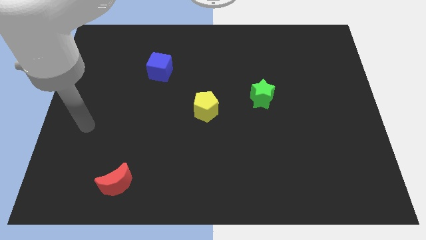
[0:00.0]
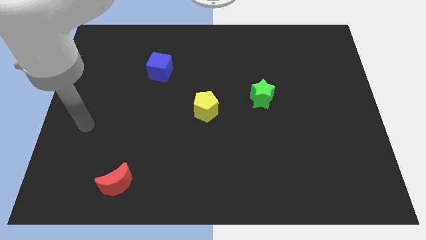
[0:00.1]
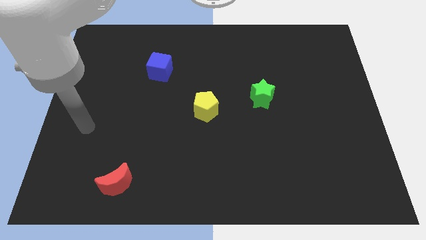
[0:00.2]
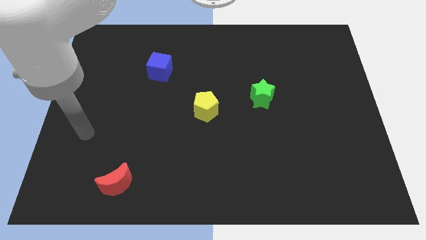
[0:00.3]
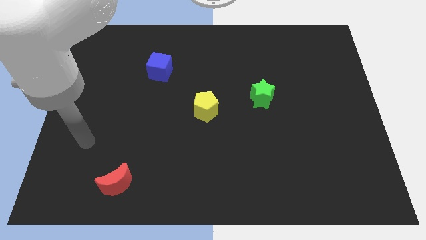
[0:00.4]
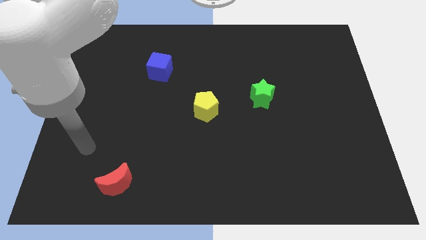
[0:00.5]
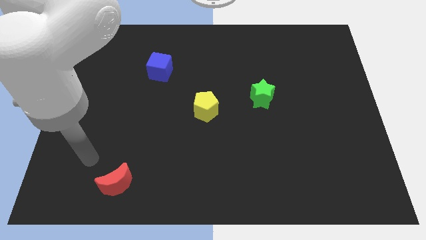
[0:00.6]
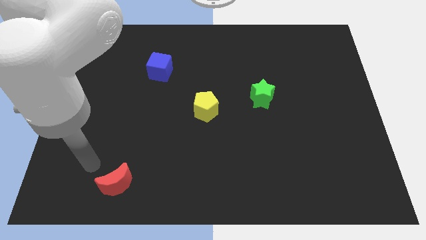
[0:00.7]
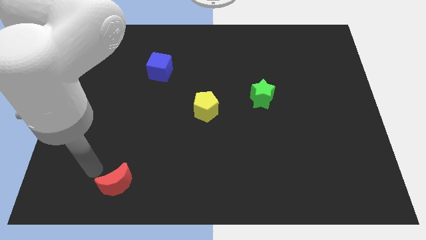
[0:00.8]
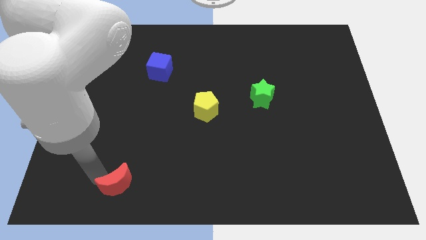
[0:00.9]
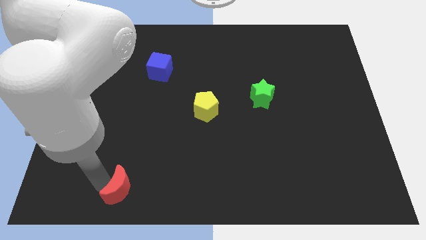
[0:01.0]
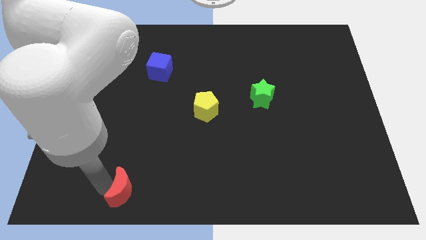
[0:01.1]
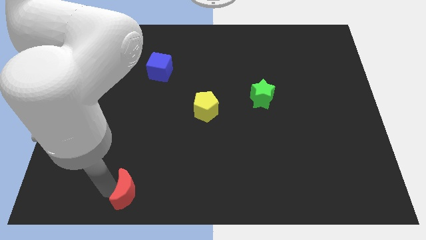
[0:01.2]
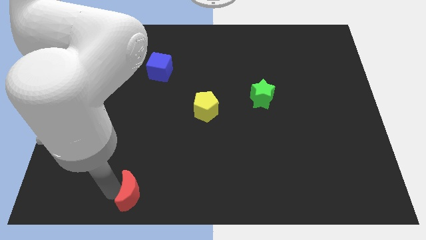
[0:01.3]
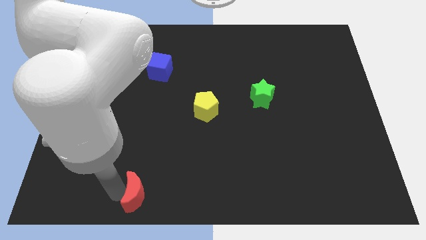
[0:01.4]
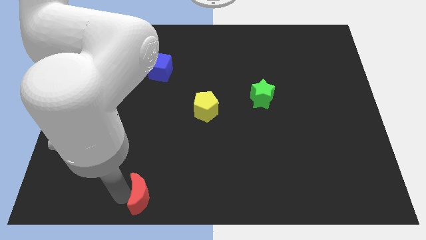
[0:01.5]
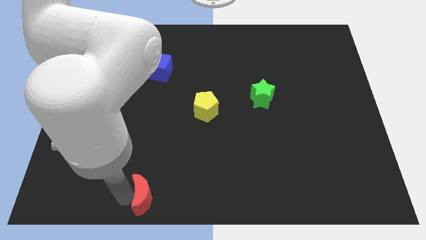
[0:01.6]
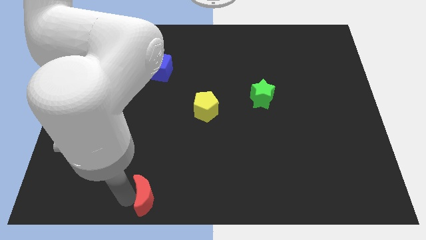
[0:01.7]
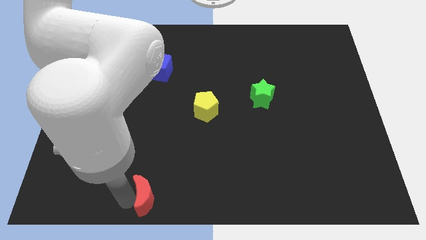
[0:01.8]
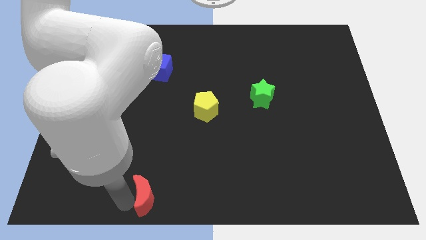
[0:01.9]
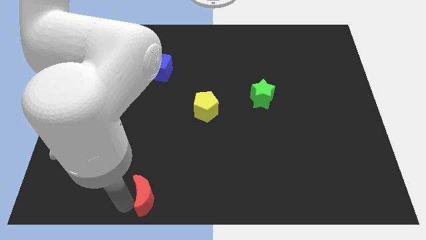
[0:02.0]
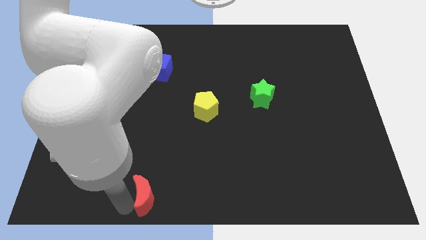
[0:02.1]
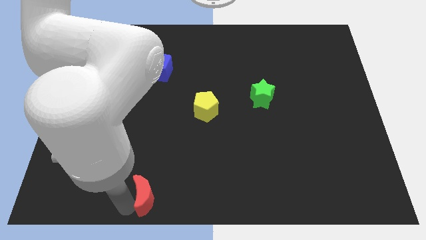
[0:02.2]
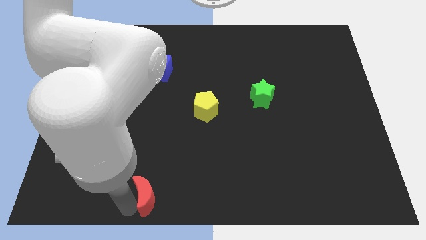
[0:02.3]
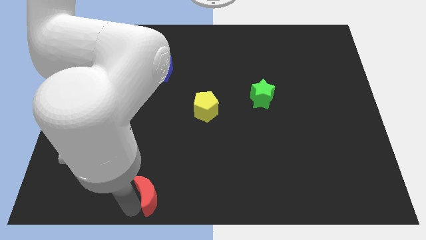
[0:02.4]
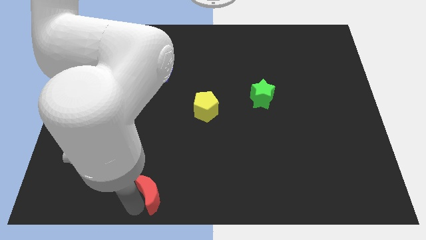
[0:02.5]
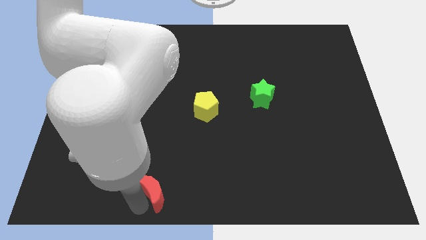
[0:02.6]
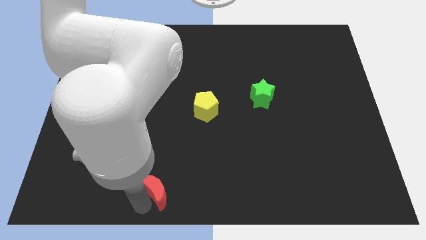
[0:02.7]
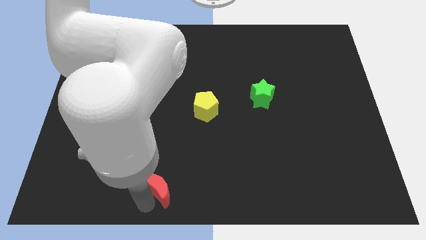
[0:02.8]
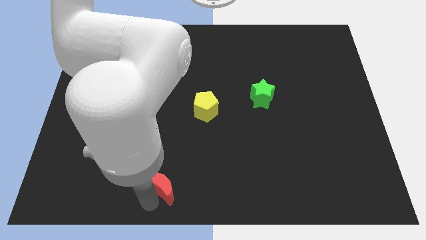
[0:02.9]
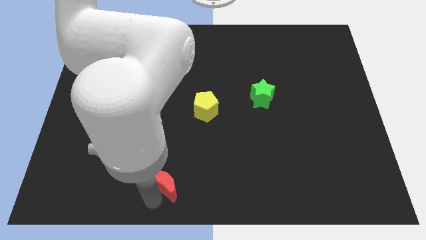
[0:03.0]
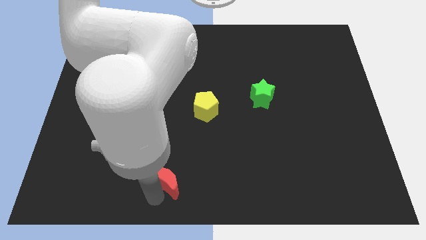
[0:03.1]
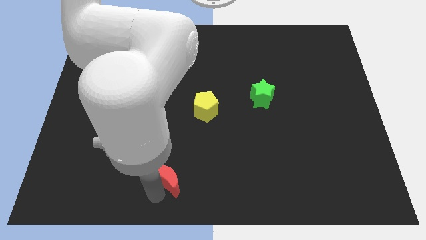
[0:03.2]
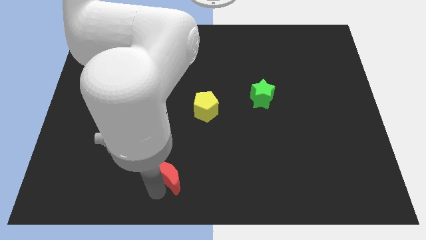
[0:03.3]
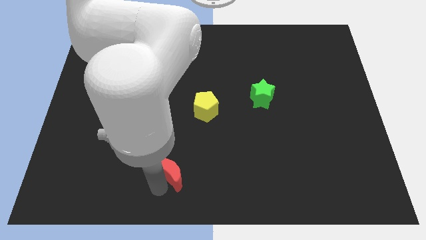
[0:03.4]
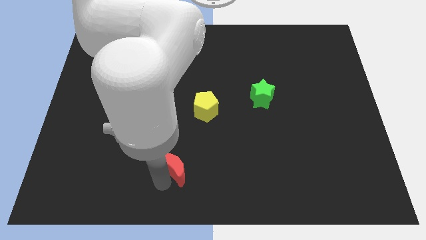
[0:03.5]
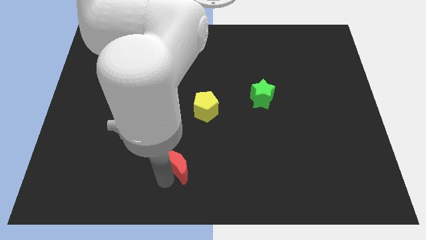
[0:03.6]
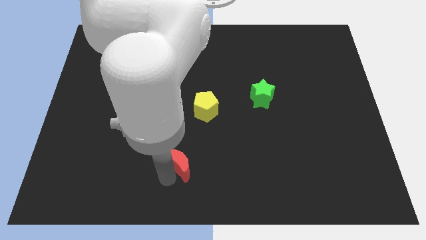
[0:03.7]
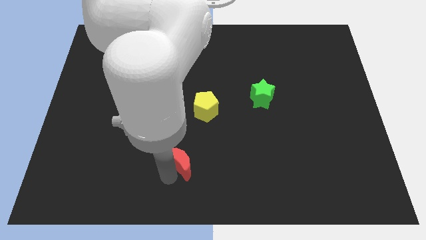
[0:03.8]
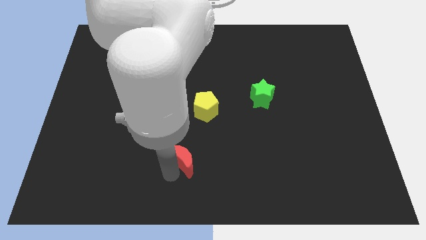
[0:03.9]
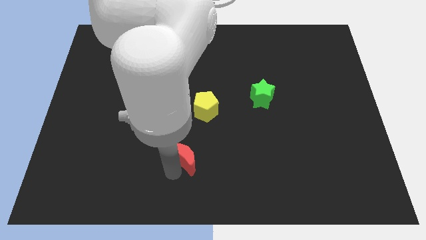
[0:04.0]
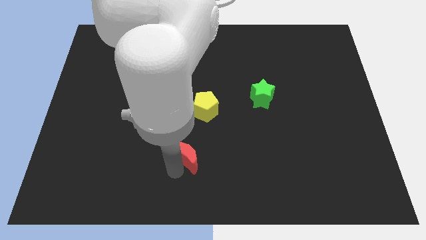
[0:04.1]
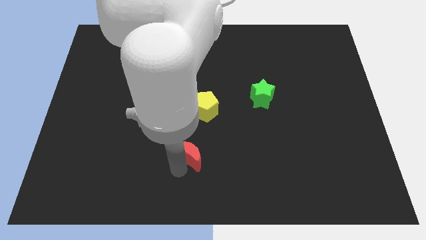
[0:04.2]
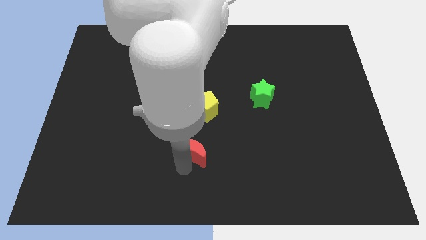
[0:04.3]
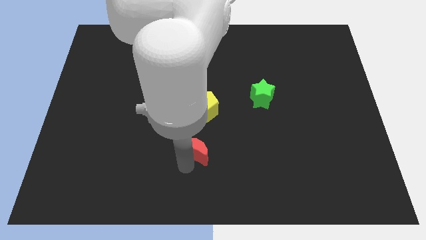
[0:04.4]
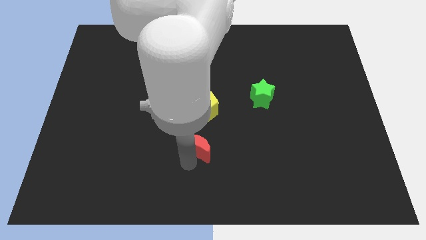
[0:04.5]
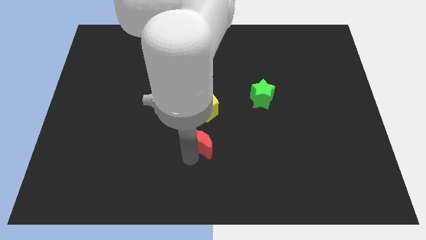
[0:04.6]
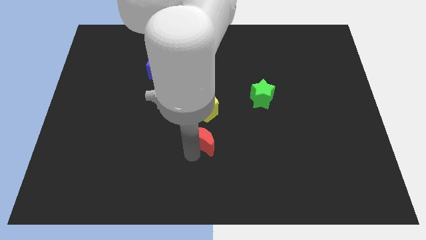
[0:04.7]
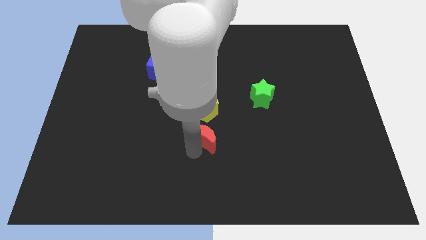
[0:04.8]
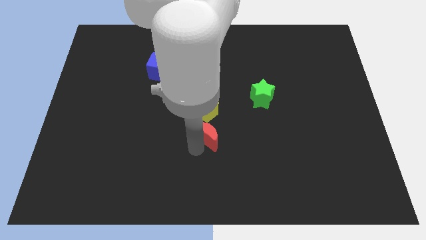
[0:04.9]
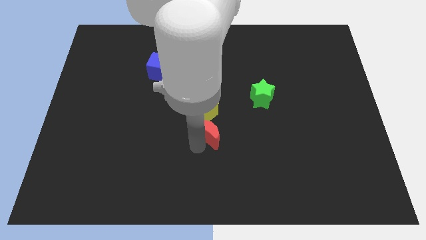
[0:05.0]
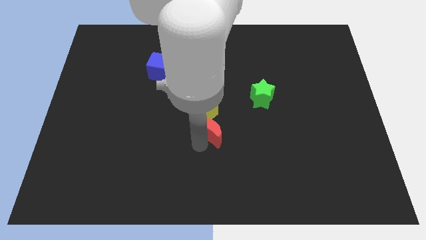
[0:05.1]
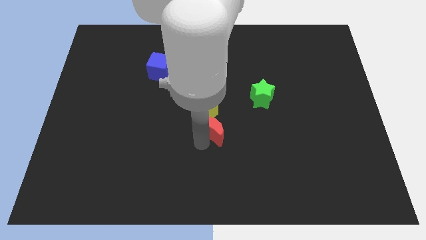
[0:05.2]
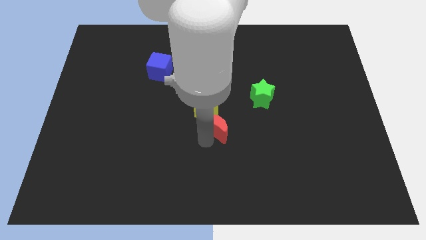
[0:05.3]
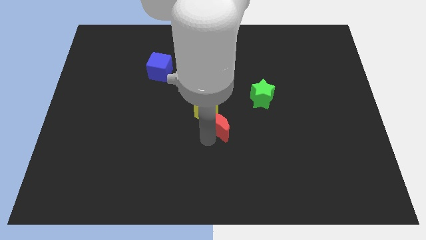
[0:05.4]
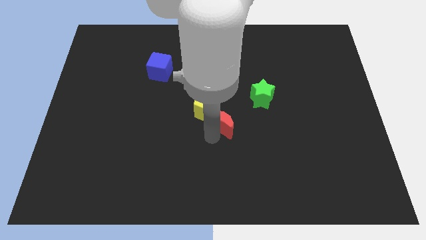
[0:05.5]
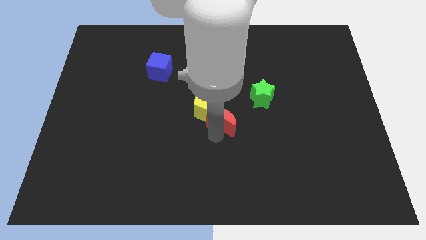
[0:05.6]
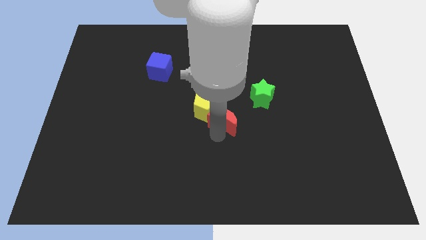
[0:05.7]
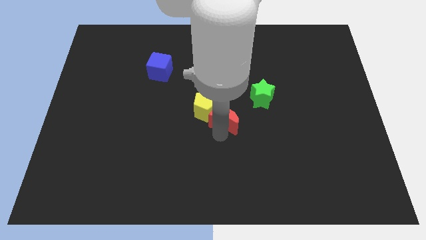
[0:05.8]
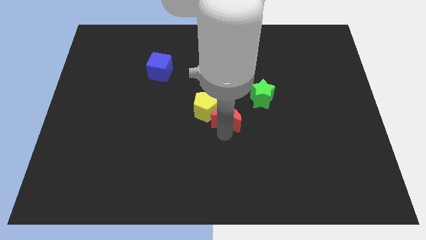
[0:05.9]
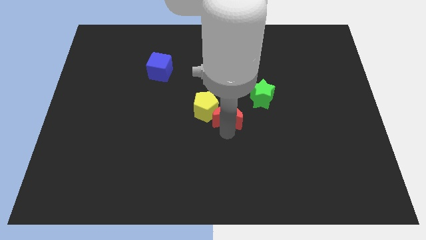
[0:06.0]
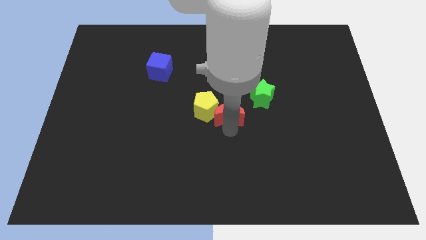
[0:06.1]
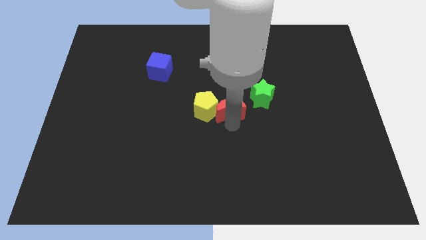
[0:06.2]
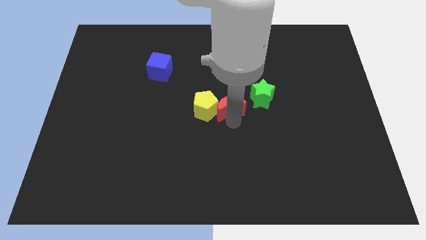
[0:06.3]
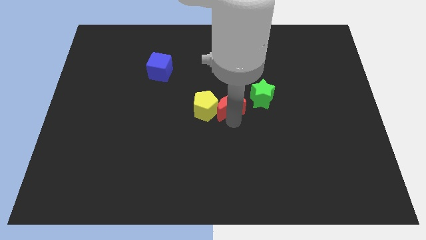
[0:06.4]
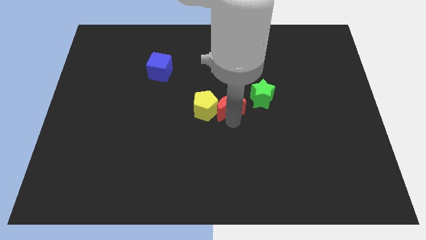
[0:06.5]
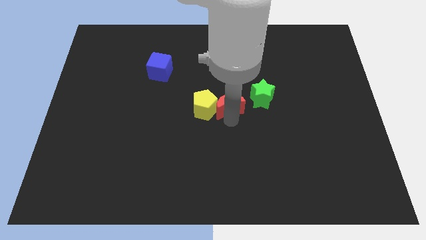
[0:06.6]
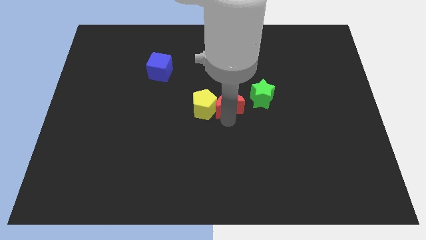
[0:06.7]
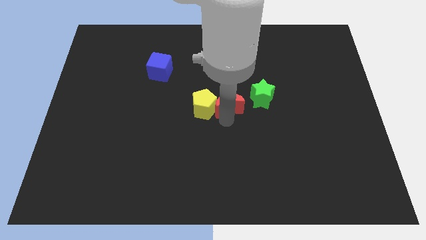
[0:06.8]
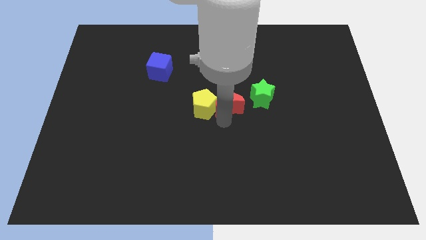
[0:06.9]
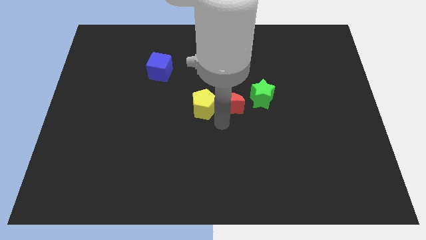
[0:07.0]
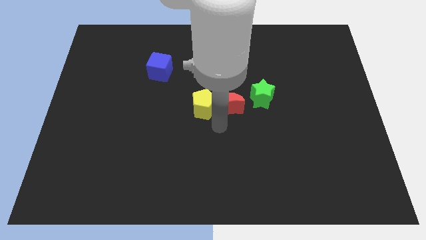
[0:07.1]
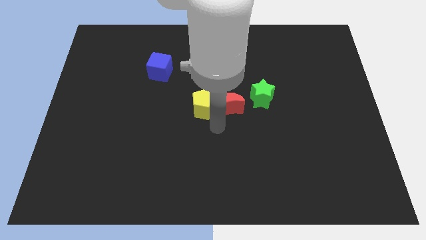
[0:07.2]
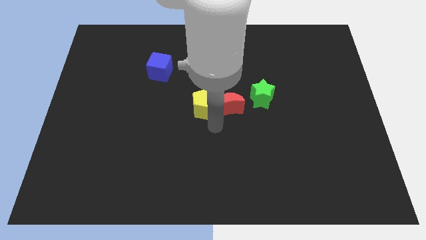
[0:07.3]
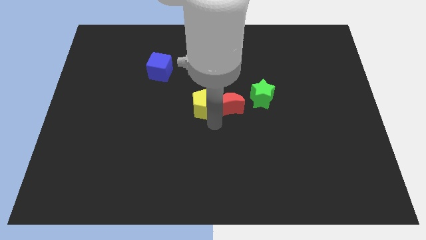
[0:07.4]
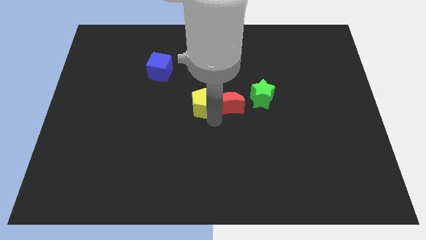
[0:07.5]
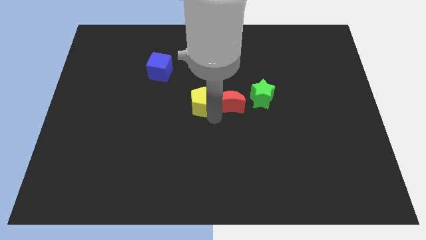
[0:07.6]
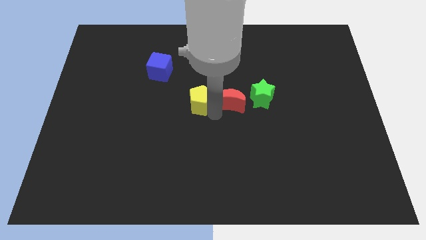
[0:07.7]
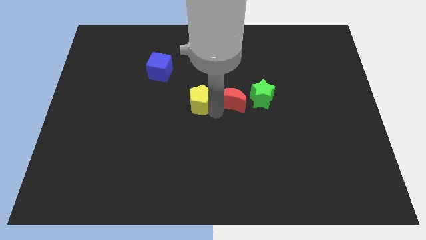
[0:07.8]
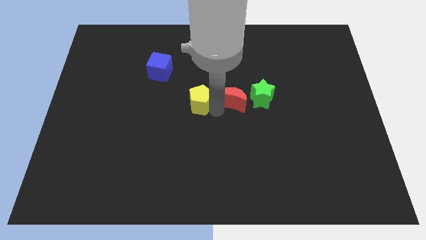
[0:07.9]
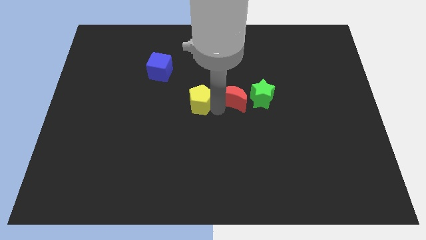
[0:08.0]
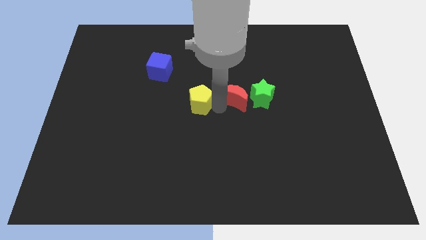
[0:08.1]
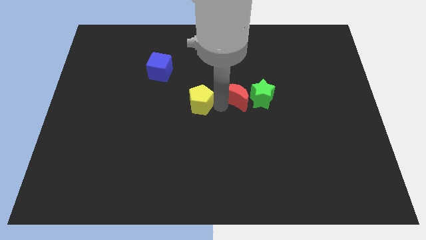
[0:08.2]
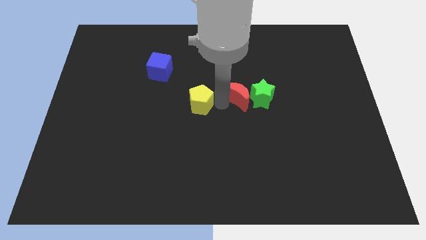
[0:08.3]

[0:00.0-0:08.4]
slide the moon towards the green block
